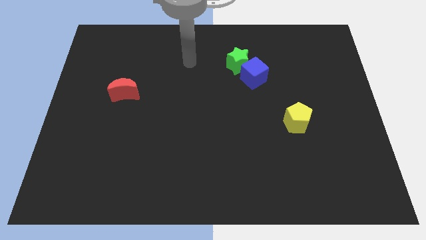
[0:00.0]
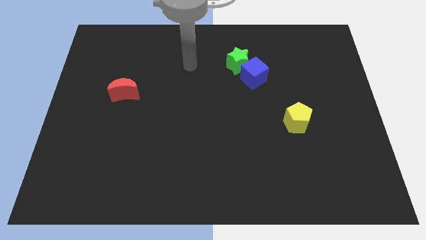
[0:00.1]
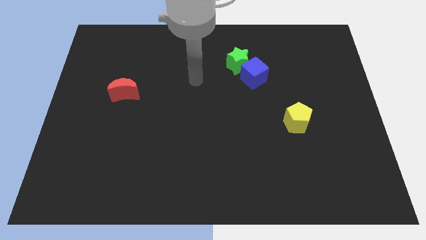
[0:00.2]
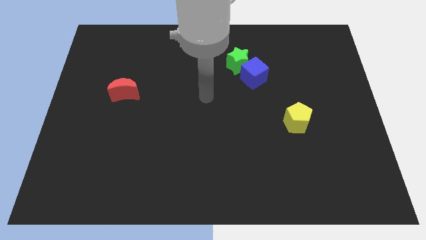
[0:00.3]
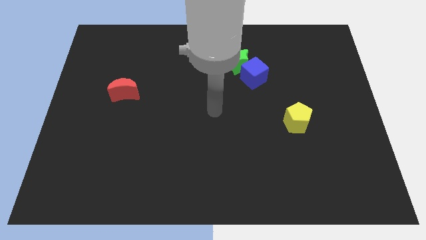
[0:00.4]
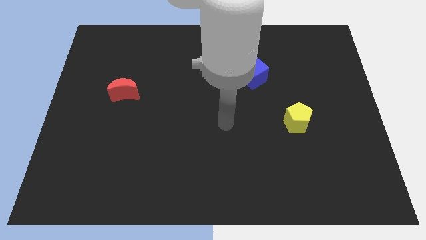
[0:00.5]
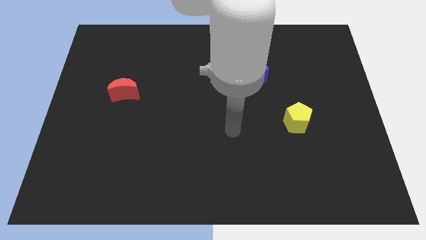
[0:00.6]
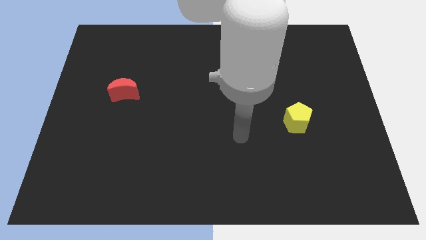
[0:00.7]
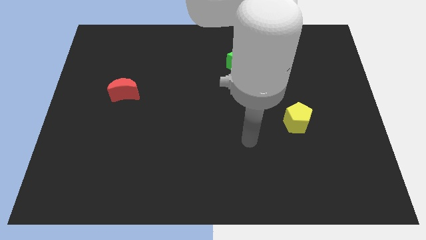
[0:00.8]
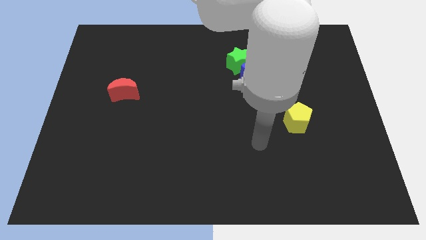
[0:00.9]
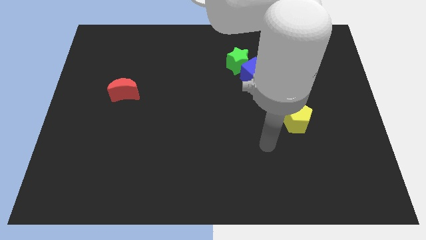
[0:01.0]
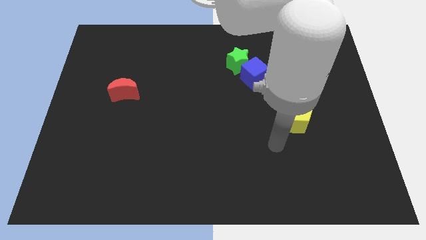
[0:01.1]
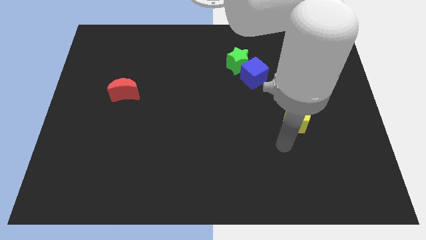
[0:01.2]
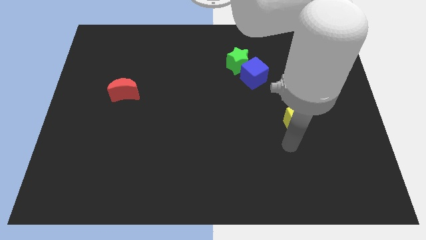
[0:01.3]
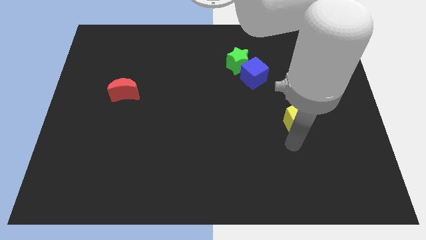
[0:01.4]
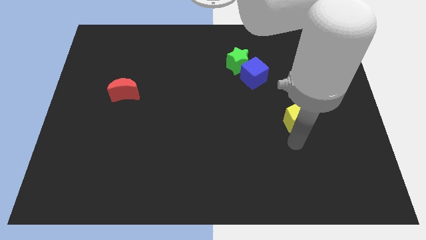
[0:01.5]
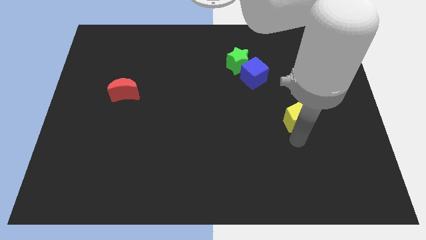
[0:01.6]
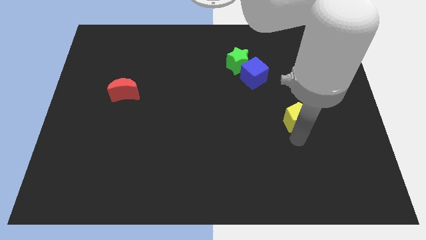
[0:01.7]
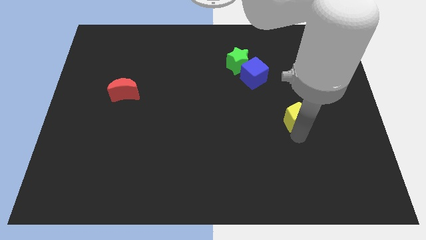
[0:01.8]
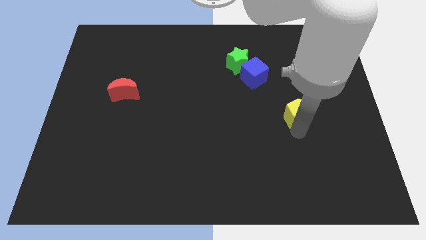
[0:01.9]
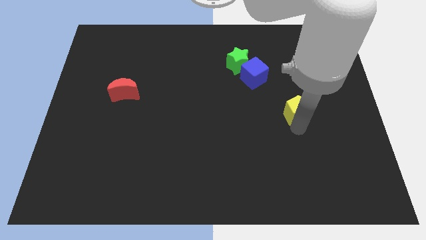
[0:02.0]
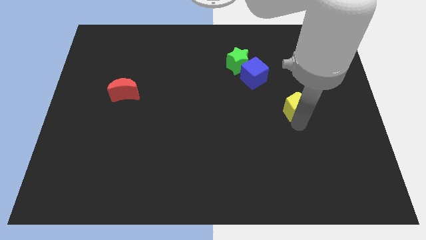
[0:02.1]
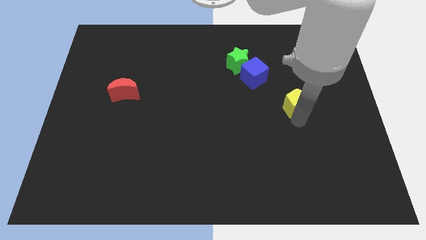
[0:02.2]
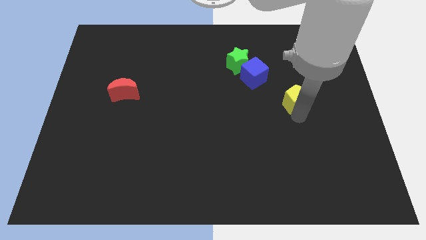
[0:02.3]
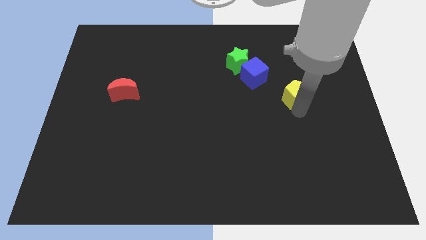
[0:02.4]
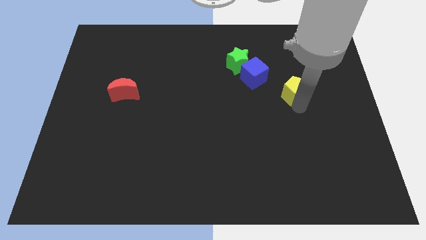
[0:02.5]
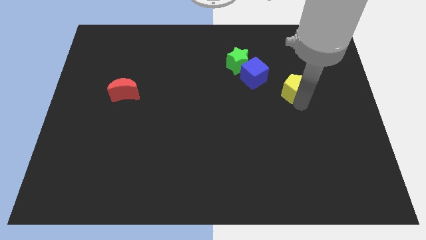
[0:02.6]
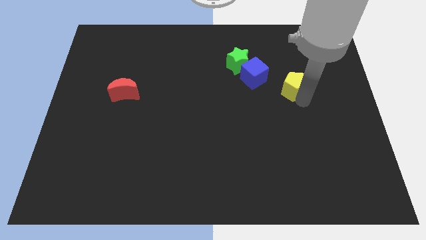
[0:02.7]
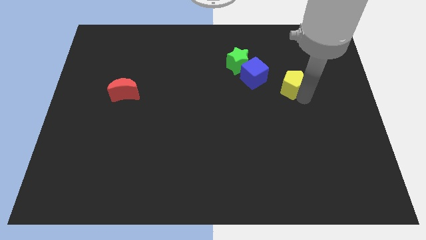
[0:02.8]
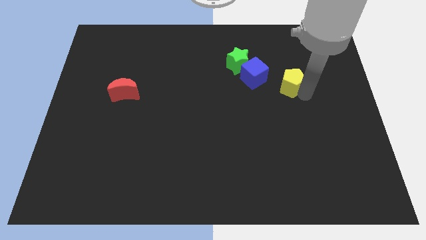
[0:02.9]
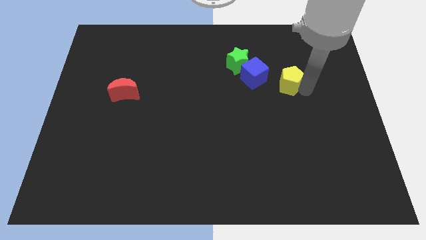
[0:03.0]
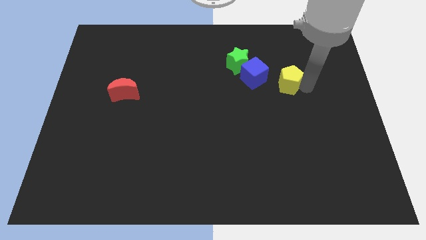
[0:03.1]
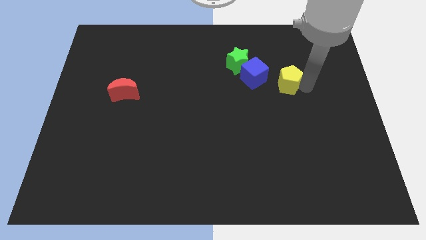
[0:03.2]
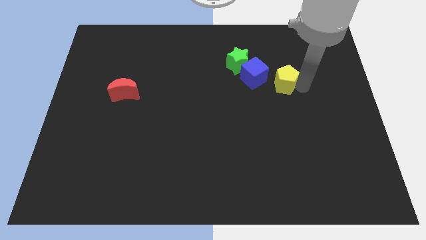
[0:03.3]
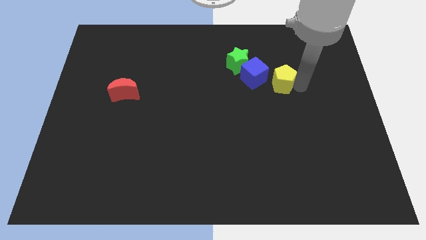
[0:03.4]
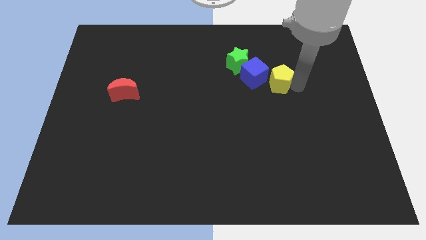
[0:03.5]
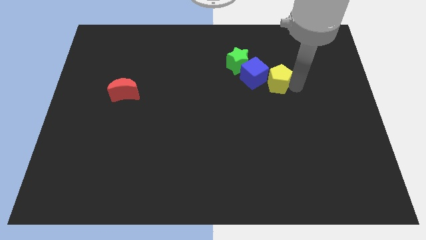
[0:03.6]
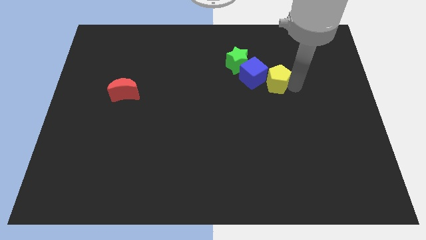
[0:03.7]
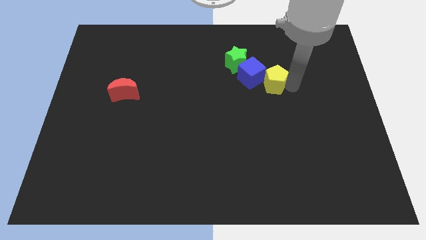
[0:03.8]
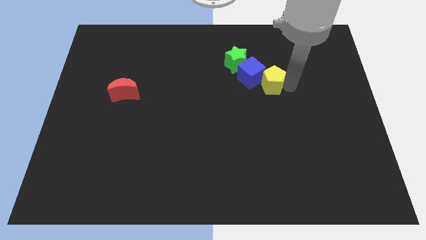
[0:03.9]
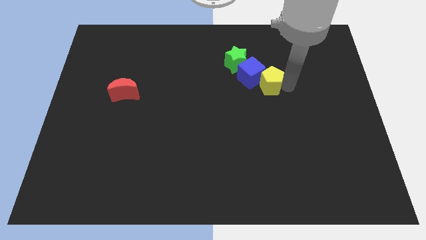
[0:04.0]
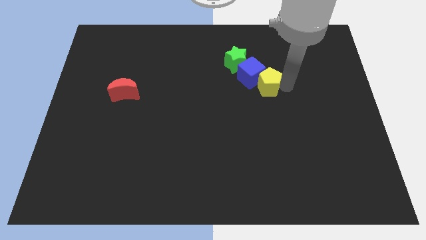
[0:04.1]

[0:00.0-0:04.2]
slide the yellow pentagon close to the blue block

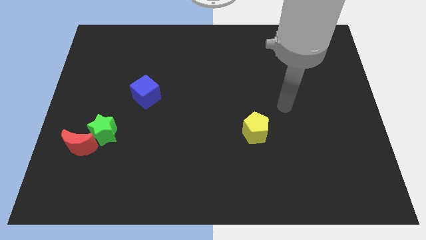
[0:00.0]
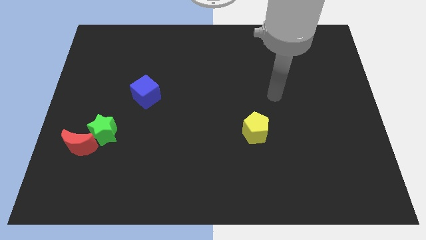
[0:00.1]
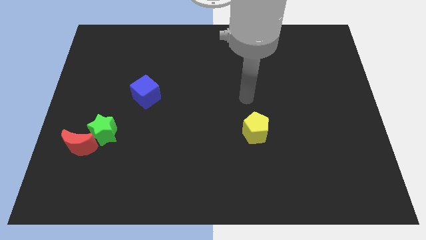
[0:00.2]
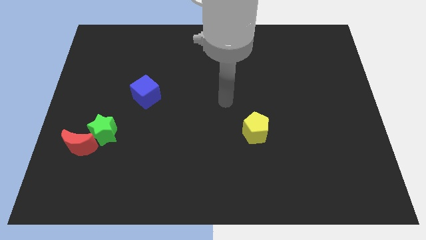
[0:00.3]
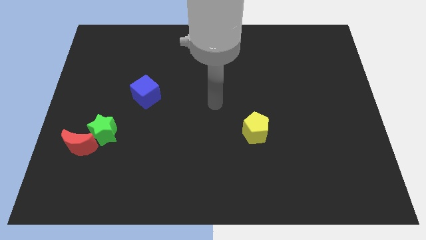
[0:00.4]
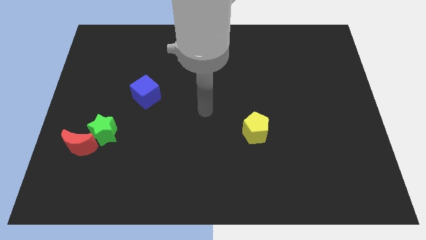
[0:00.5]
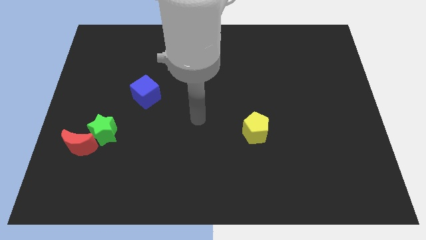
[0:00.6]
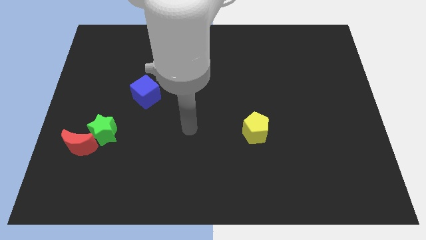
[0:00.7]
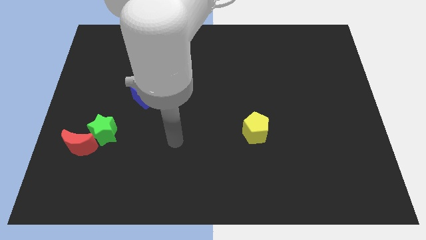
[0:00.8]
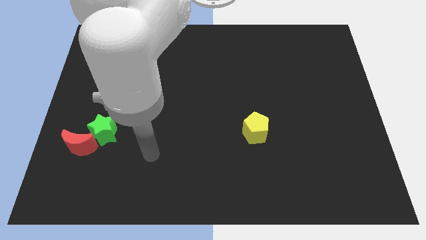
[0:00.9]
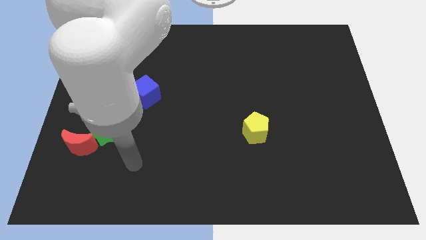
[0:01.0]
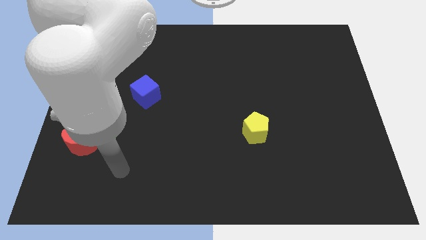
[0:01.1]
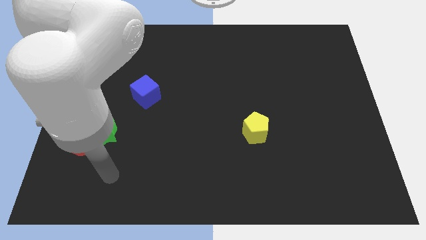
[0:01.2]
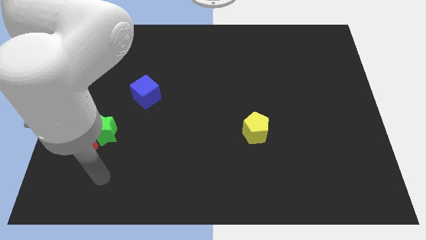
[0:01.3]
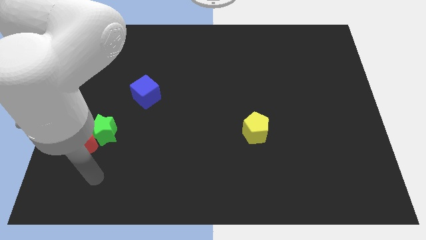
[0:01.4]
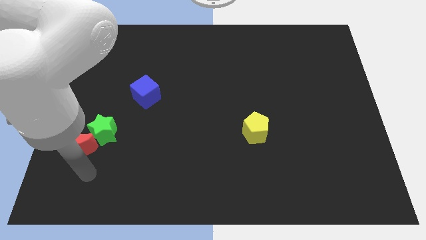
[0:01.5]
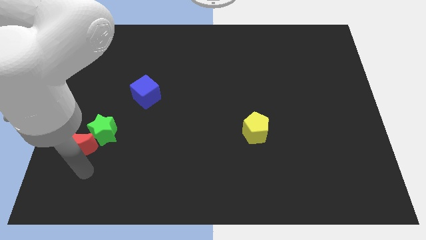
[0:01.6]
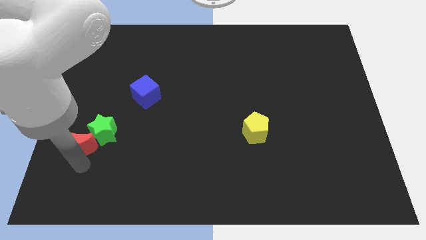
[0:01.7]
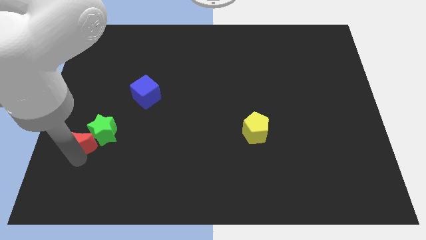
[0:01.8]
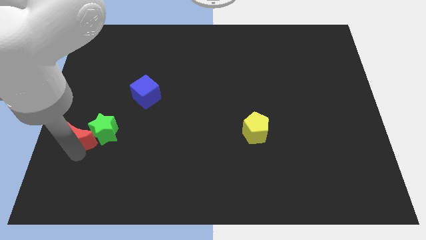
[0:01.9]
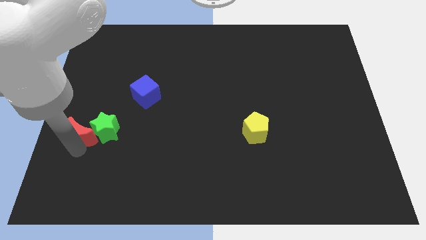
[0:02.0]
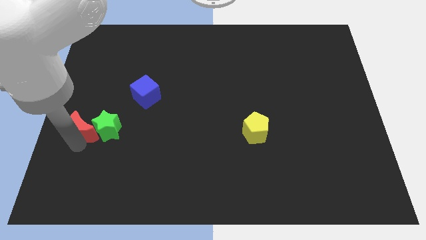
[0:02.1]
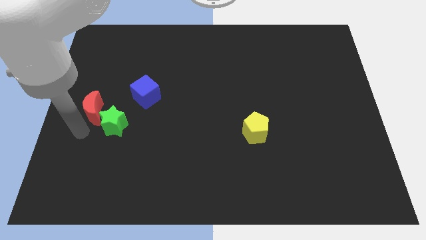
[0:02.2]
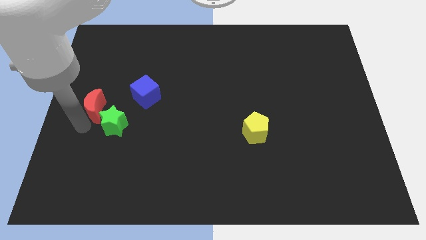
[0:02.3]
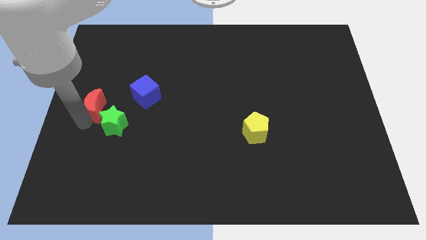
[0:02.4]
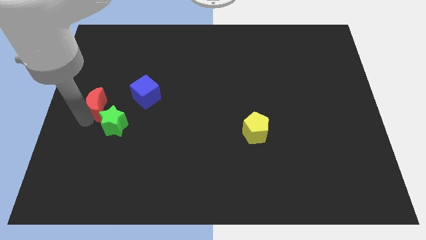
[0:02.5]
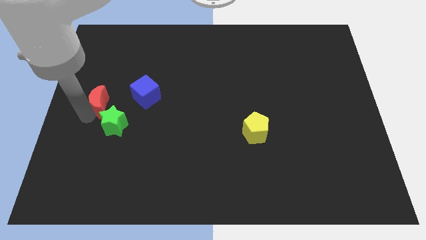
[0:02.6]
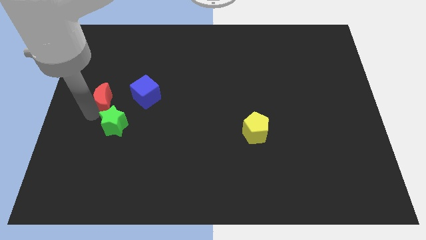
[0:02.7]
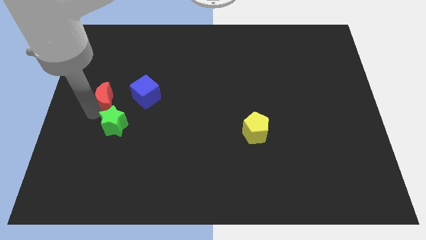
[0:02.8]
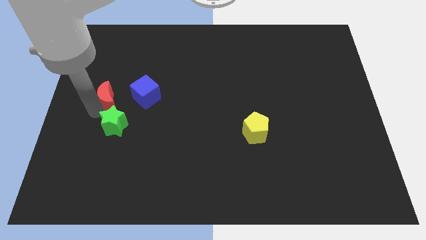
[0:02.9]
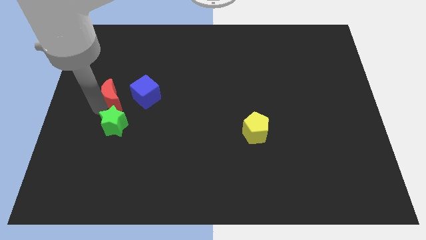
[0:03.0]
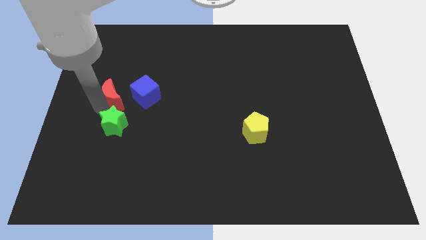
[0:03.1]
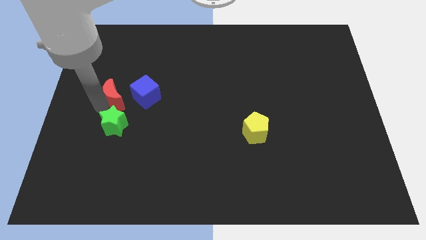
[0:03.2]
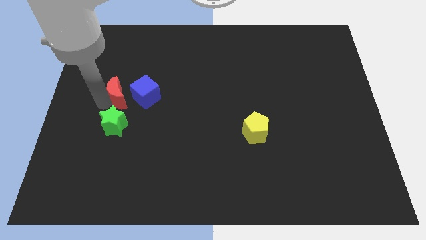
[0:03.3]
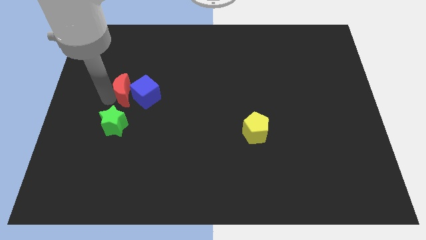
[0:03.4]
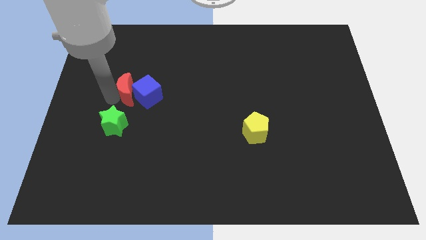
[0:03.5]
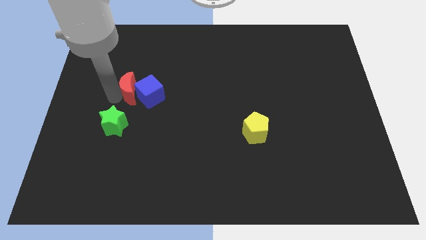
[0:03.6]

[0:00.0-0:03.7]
push the red block next to the blue block

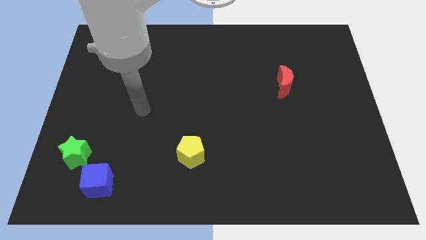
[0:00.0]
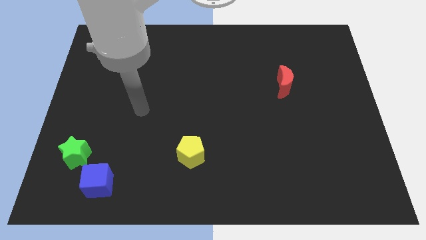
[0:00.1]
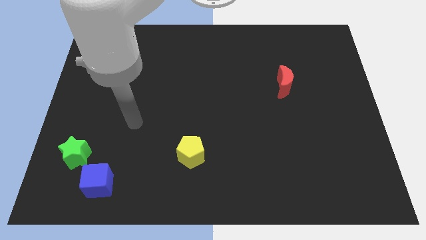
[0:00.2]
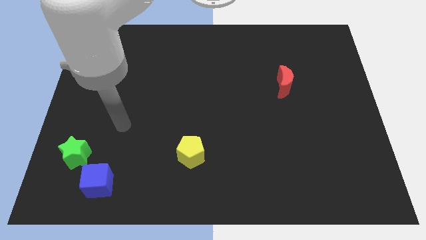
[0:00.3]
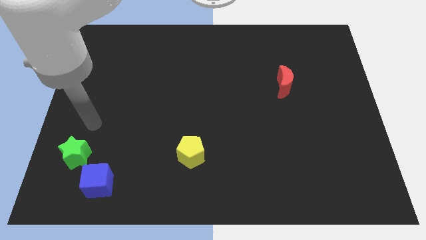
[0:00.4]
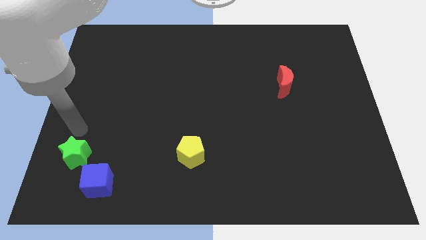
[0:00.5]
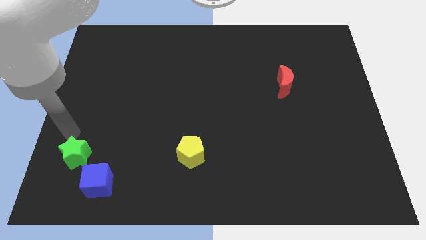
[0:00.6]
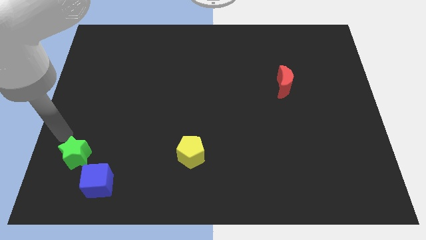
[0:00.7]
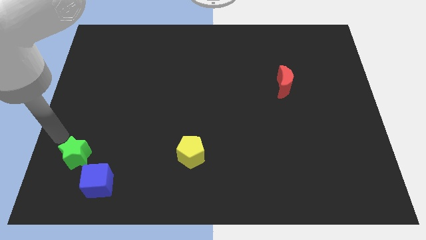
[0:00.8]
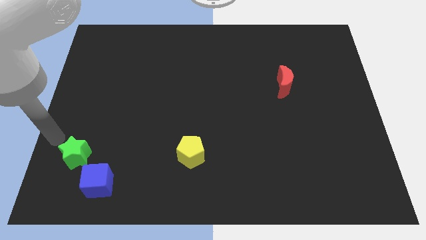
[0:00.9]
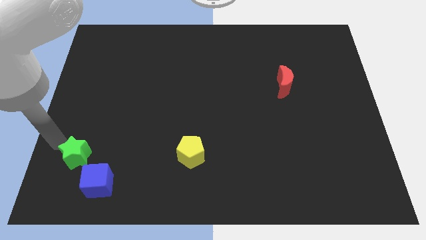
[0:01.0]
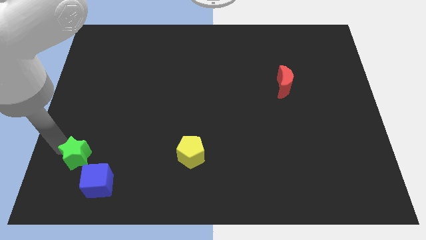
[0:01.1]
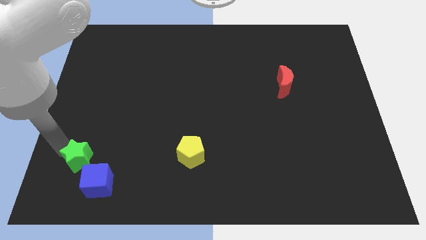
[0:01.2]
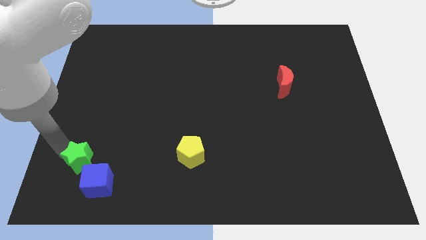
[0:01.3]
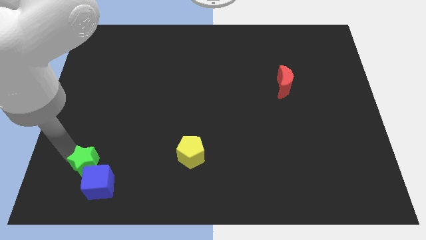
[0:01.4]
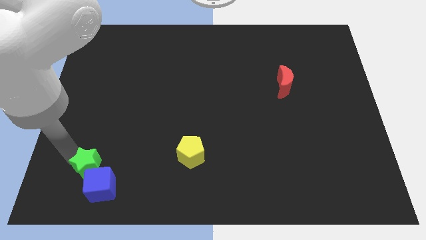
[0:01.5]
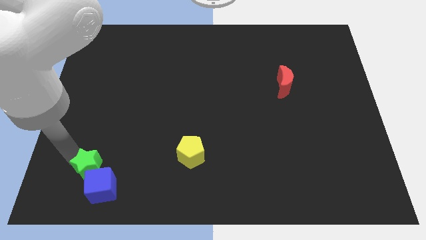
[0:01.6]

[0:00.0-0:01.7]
push the green block next to the cube
